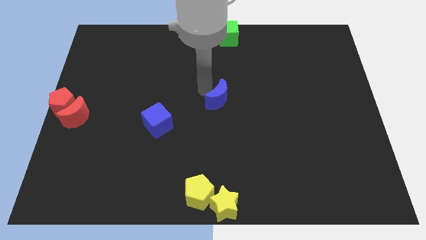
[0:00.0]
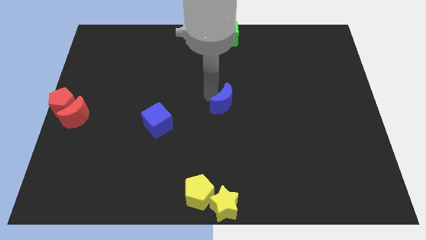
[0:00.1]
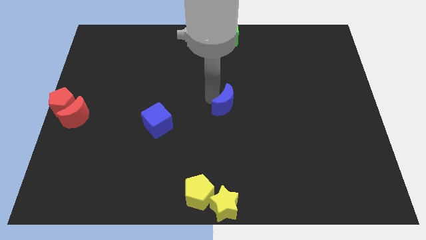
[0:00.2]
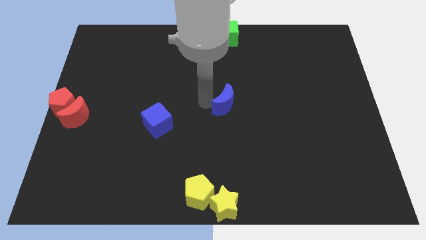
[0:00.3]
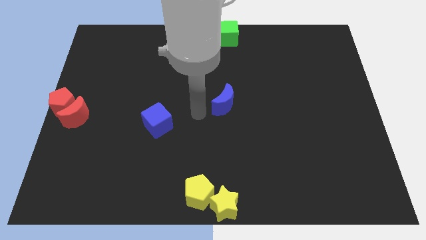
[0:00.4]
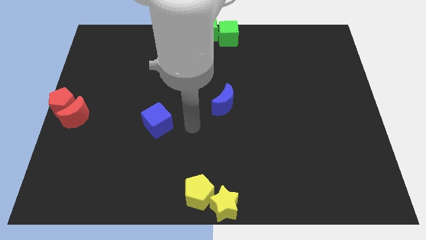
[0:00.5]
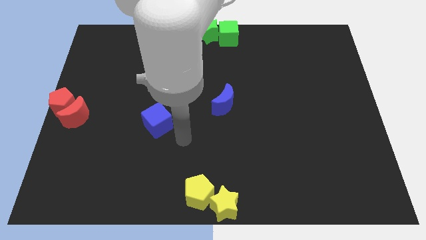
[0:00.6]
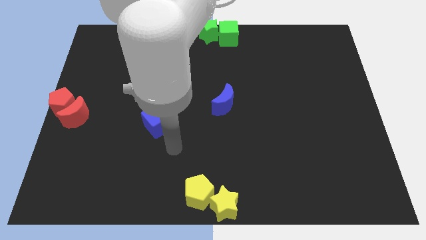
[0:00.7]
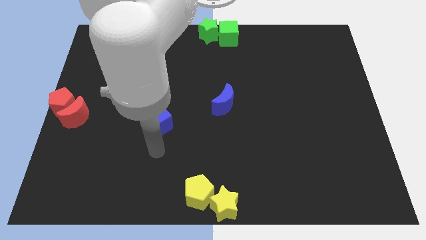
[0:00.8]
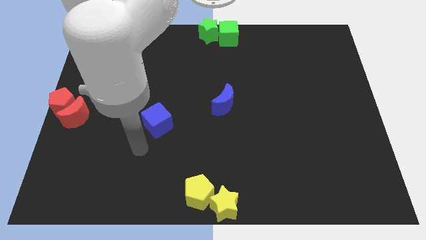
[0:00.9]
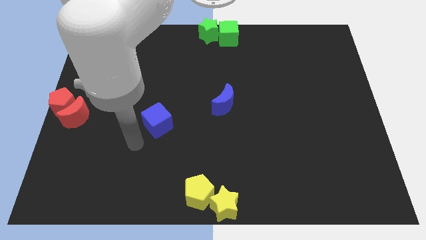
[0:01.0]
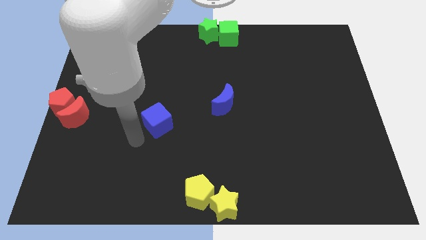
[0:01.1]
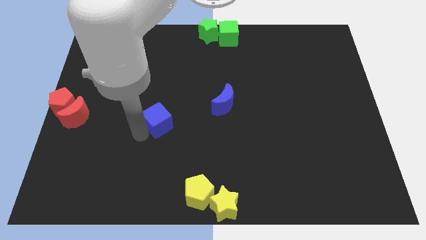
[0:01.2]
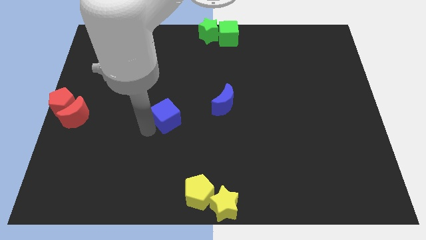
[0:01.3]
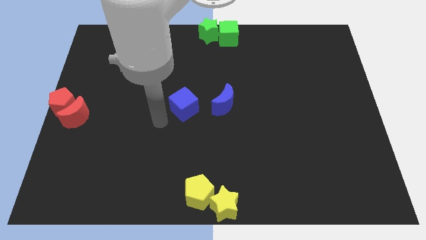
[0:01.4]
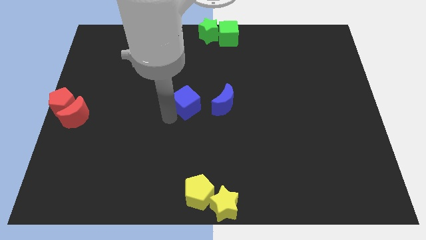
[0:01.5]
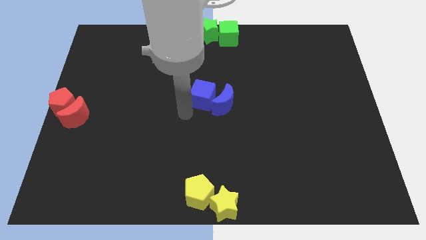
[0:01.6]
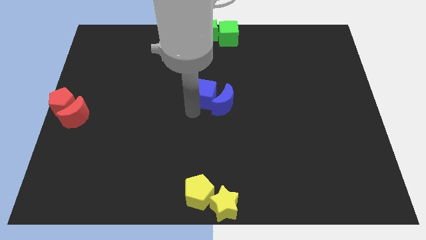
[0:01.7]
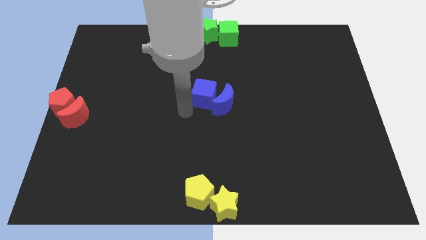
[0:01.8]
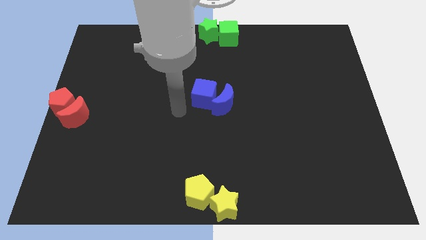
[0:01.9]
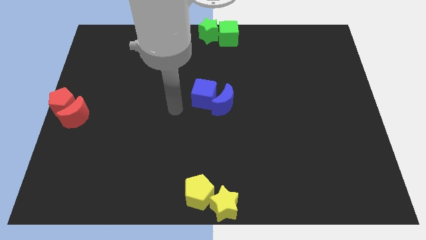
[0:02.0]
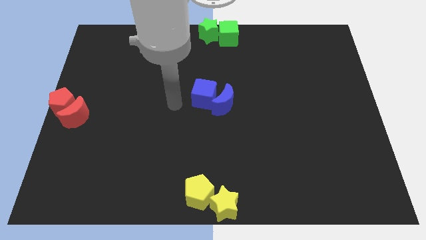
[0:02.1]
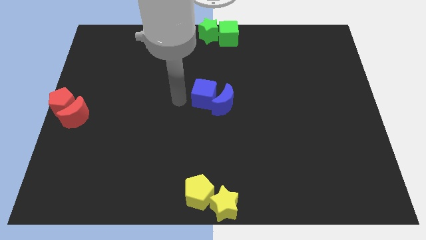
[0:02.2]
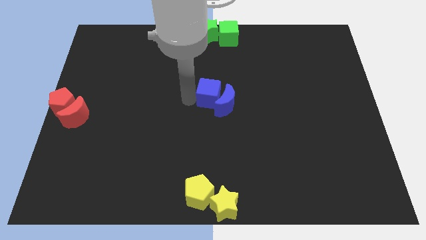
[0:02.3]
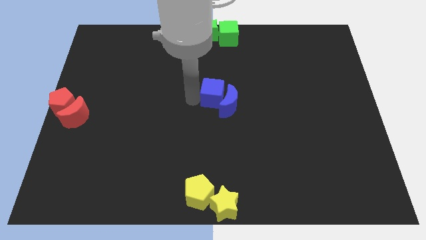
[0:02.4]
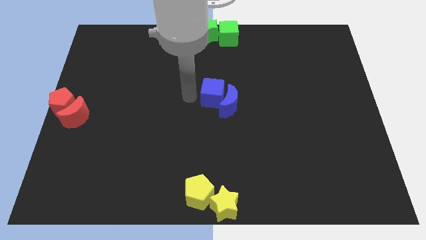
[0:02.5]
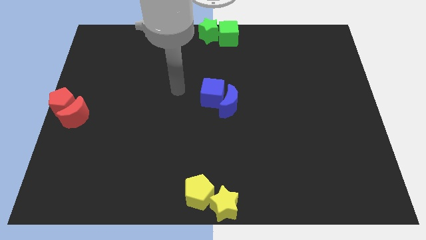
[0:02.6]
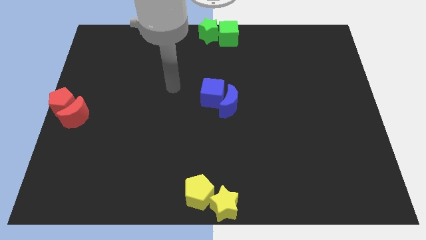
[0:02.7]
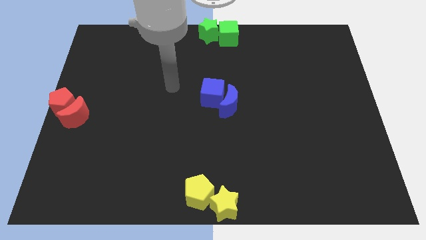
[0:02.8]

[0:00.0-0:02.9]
push the blue cube into the blue moon

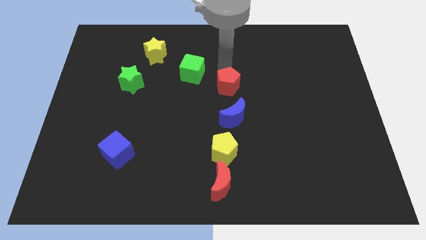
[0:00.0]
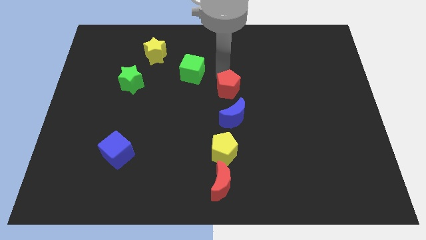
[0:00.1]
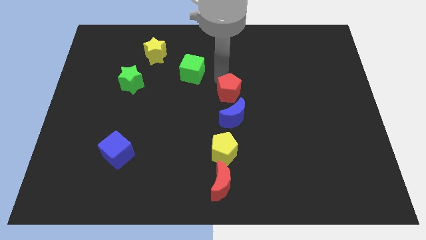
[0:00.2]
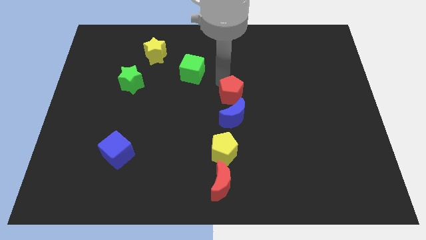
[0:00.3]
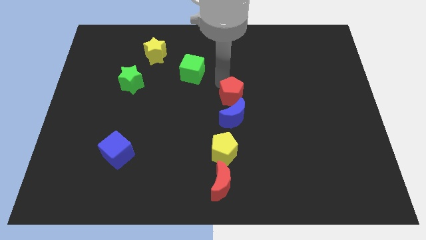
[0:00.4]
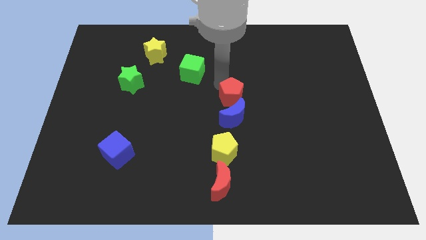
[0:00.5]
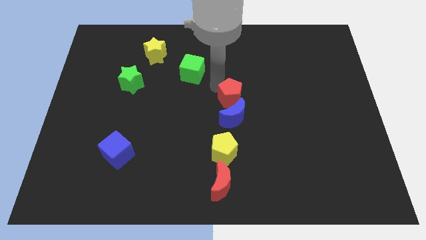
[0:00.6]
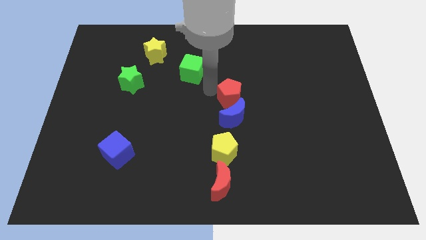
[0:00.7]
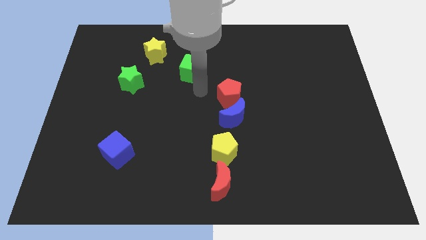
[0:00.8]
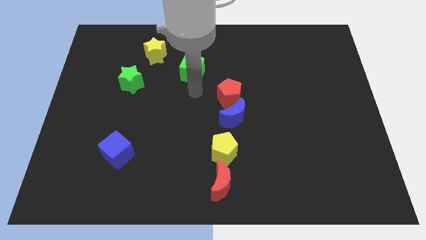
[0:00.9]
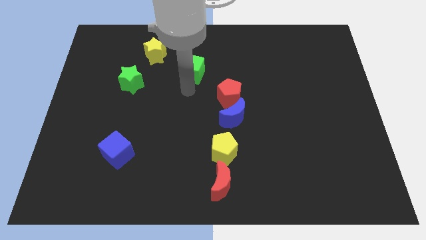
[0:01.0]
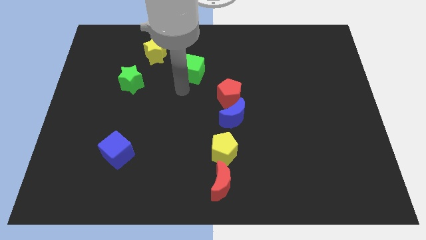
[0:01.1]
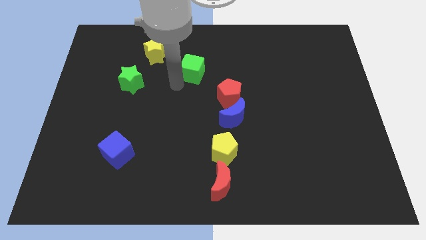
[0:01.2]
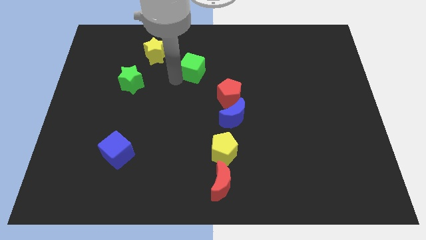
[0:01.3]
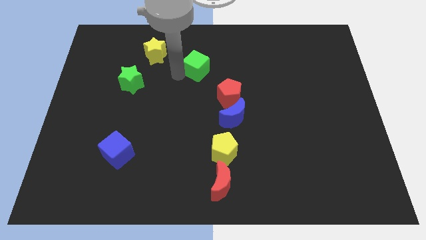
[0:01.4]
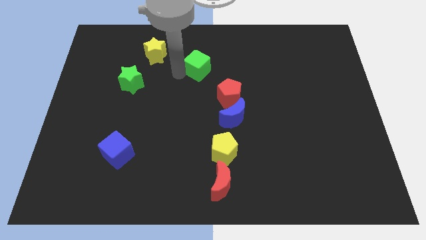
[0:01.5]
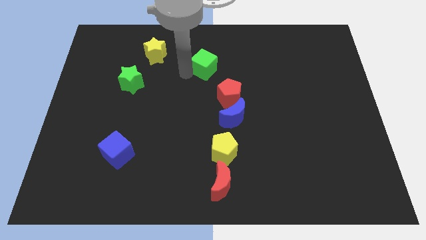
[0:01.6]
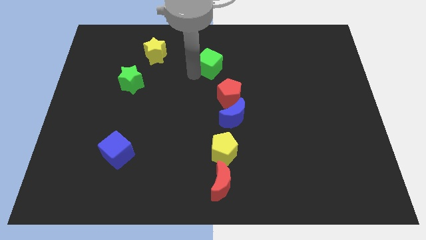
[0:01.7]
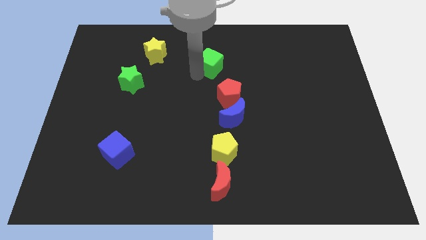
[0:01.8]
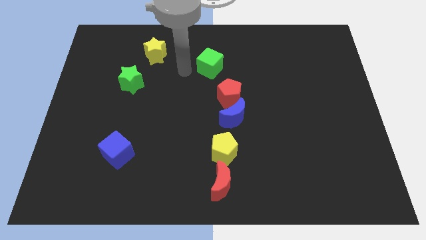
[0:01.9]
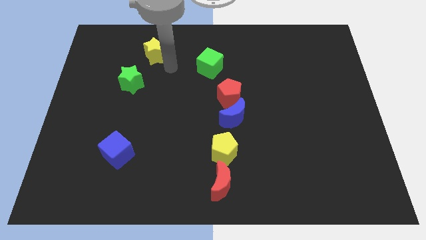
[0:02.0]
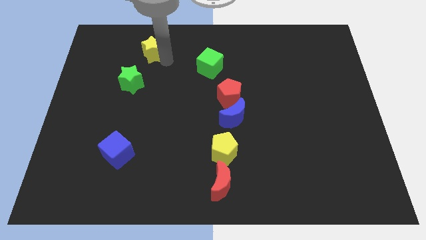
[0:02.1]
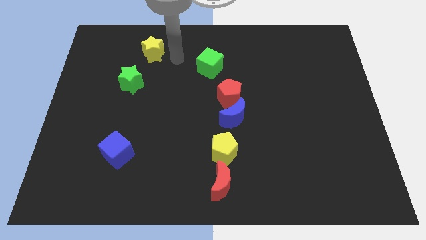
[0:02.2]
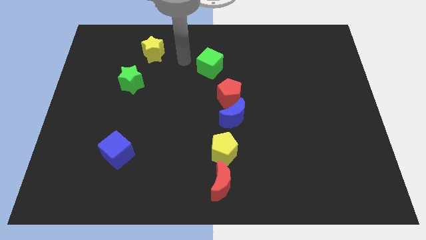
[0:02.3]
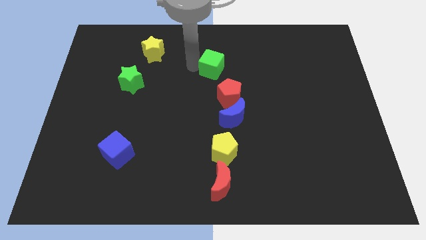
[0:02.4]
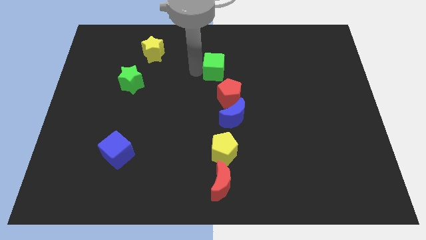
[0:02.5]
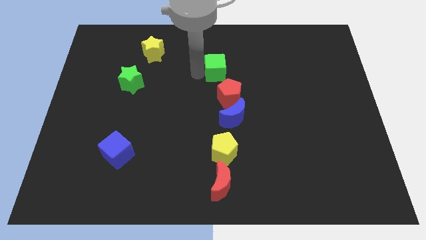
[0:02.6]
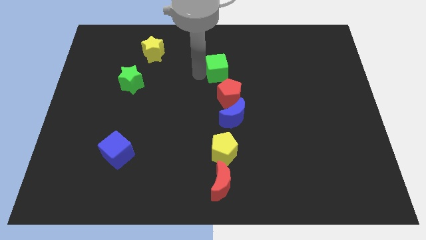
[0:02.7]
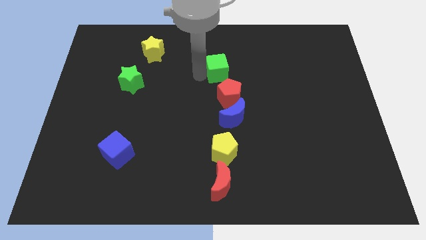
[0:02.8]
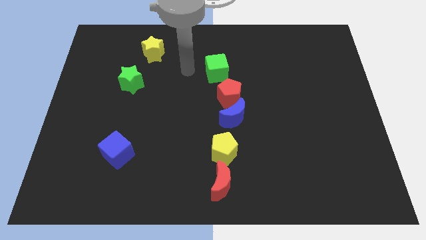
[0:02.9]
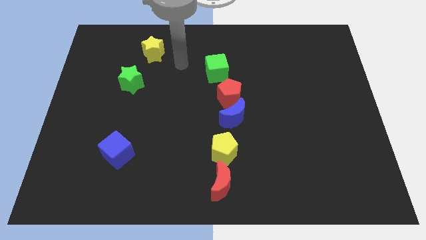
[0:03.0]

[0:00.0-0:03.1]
push green cube above red pentagon

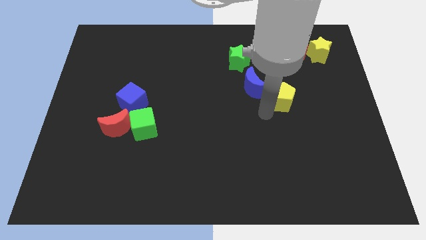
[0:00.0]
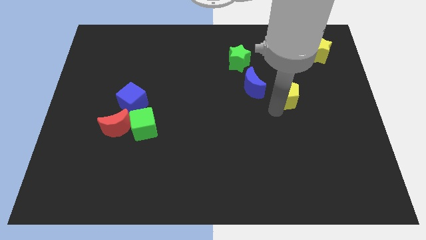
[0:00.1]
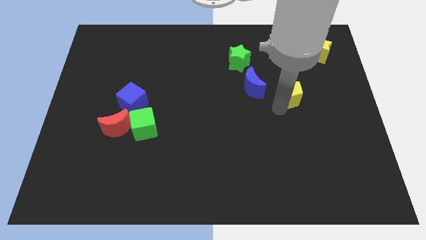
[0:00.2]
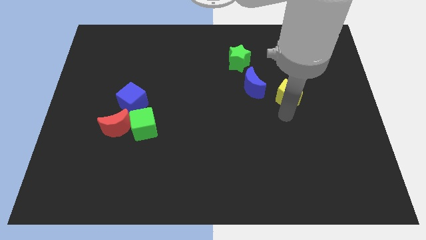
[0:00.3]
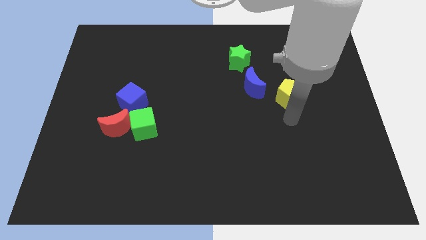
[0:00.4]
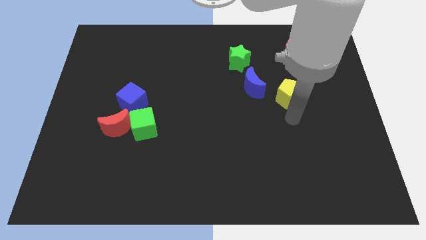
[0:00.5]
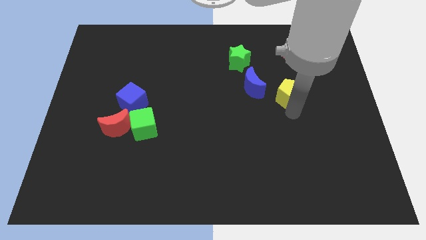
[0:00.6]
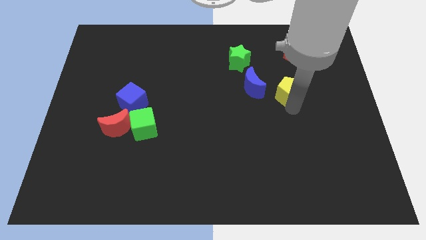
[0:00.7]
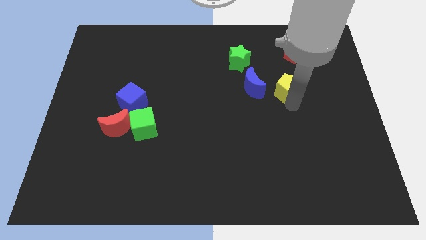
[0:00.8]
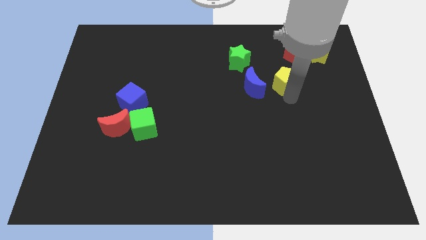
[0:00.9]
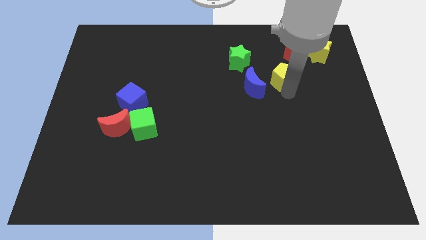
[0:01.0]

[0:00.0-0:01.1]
push the yellow pentagon right to the blue crescent

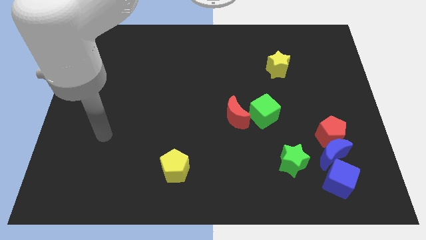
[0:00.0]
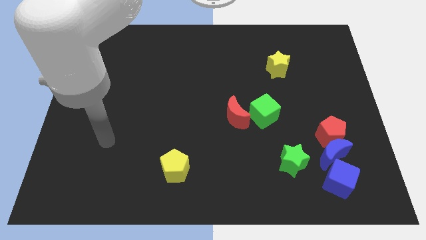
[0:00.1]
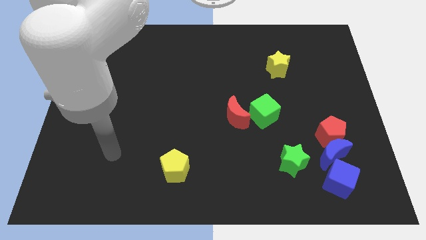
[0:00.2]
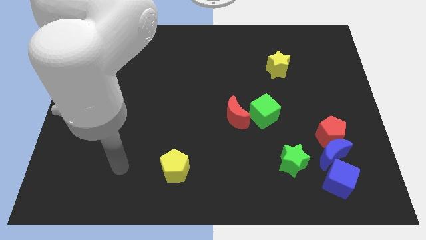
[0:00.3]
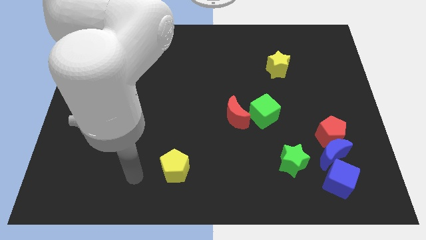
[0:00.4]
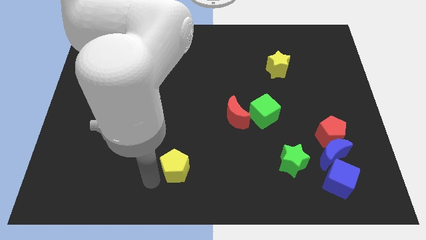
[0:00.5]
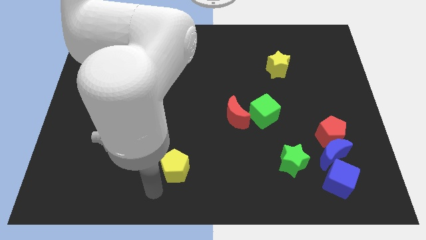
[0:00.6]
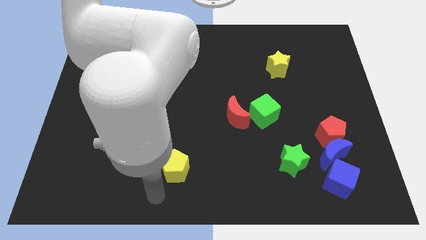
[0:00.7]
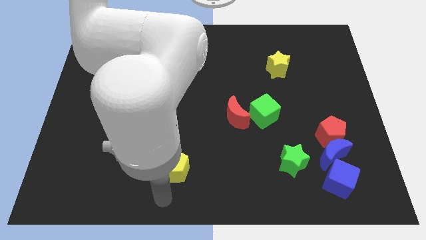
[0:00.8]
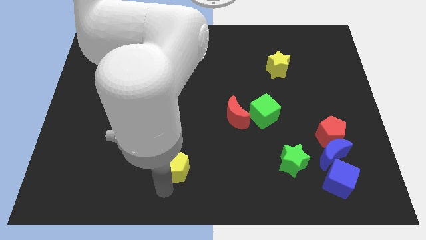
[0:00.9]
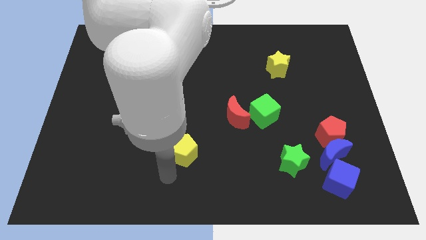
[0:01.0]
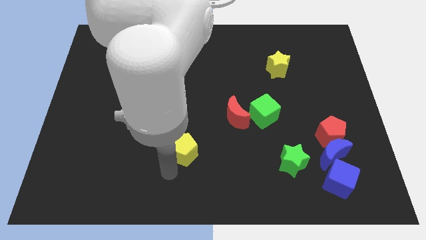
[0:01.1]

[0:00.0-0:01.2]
place your arm to the bottom of yellow pentagon

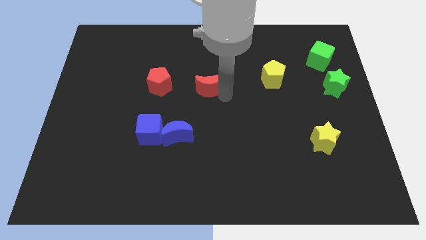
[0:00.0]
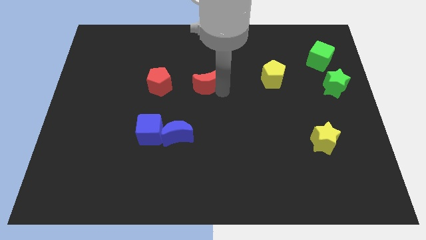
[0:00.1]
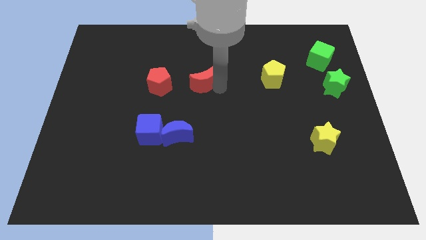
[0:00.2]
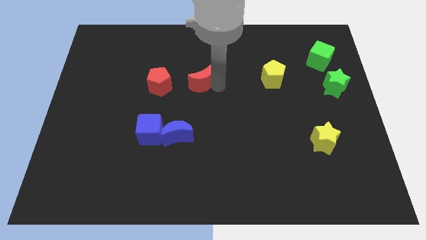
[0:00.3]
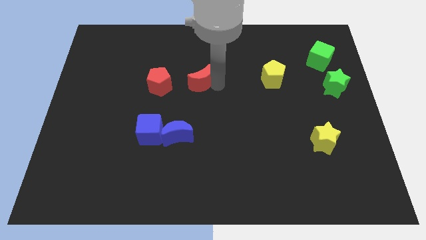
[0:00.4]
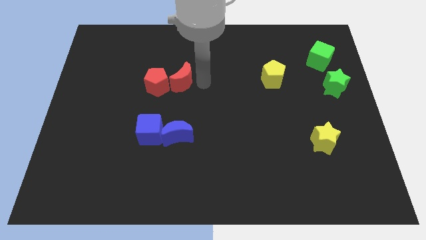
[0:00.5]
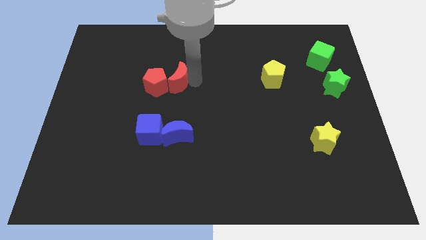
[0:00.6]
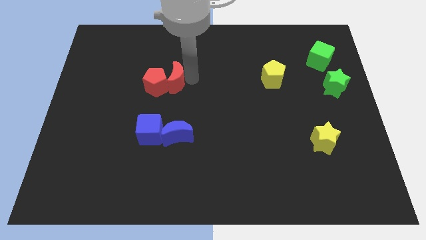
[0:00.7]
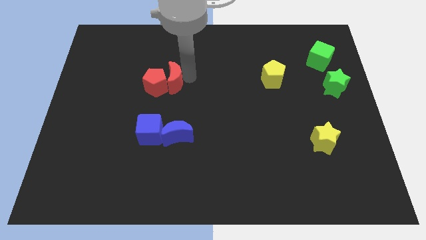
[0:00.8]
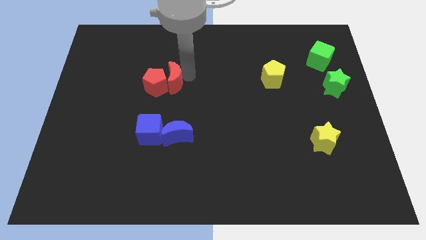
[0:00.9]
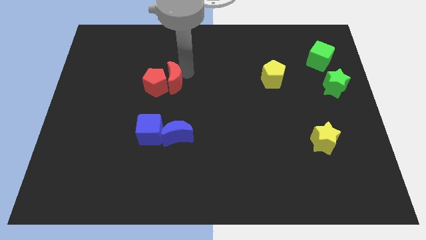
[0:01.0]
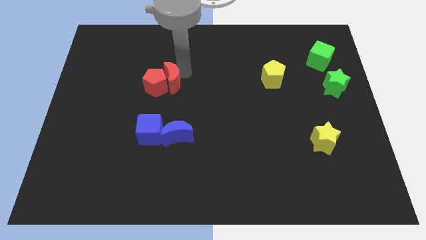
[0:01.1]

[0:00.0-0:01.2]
push the red moon into the red pentagon
